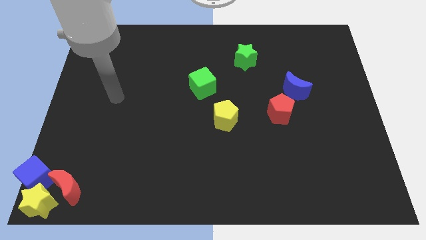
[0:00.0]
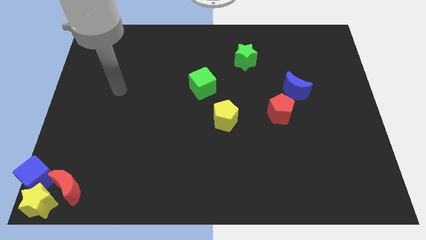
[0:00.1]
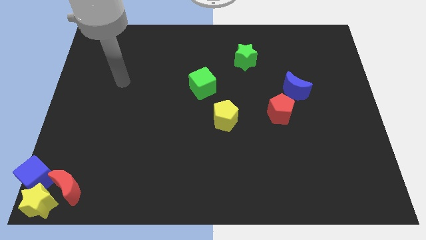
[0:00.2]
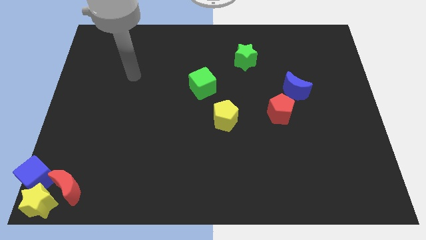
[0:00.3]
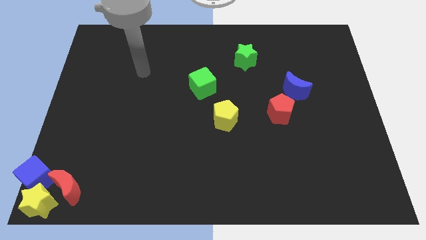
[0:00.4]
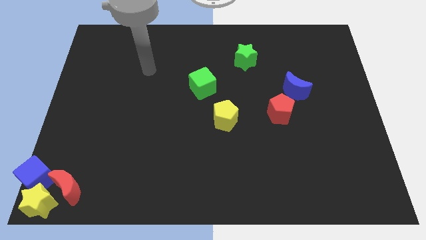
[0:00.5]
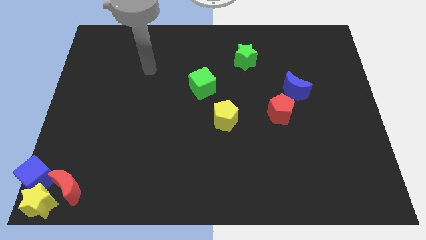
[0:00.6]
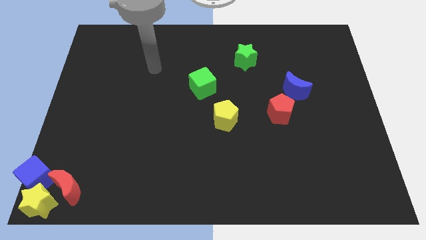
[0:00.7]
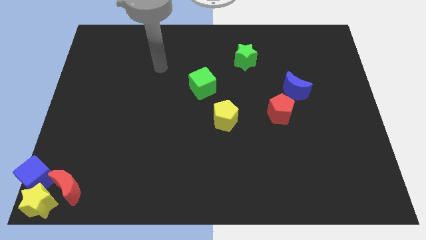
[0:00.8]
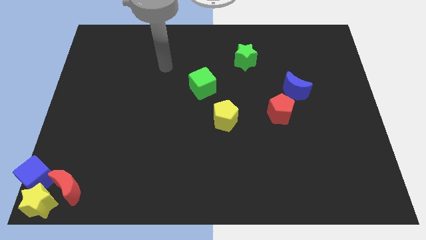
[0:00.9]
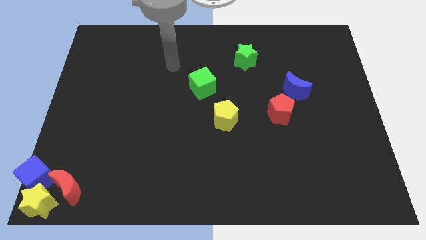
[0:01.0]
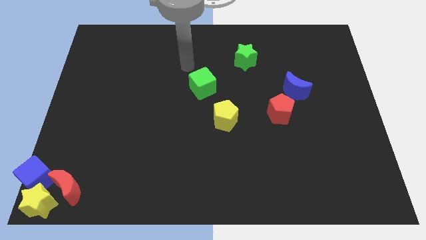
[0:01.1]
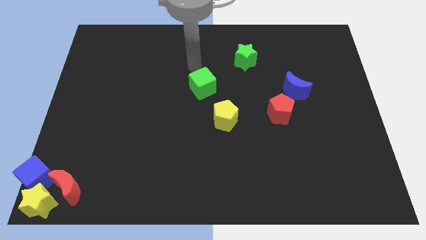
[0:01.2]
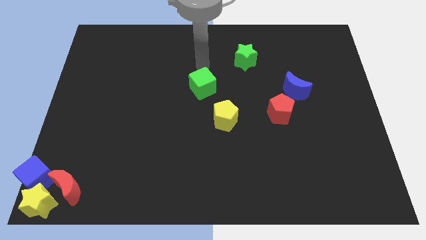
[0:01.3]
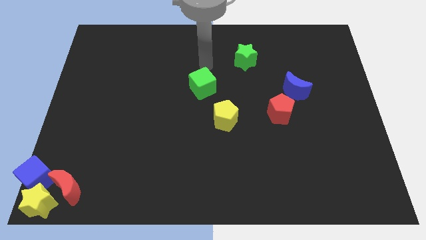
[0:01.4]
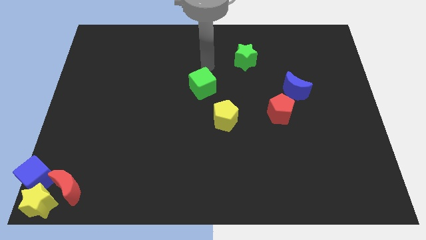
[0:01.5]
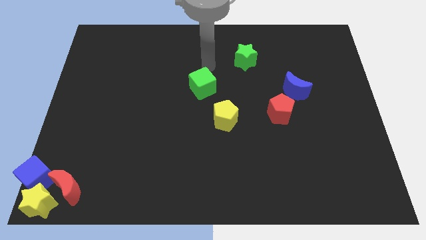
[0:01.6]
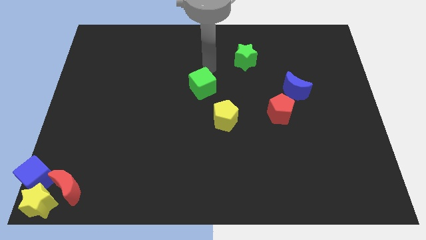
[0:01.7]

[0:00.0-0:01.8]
point above the green cube

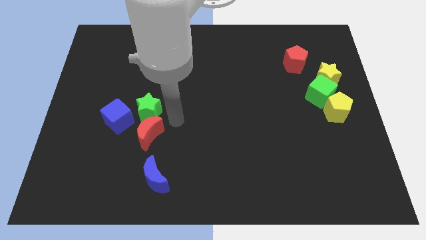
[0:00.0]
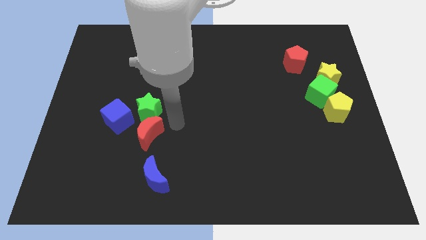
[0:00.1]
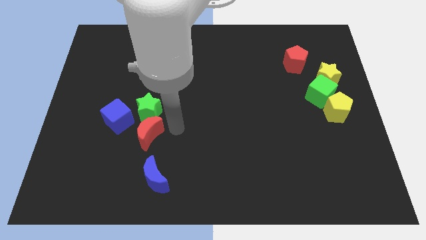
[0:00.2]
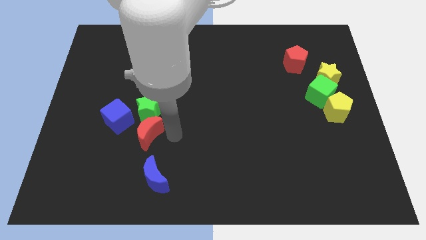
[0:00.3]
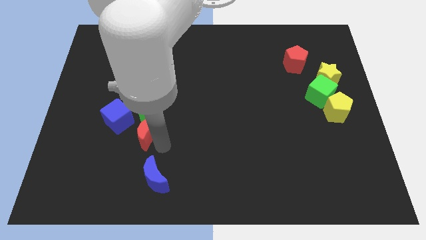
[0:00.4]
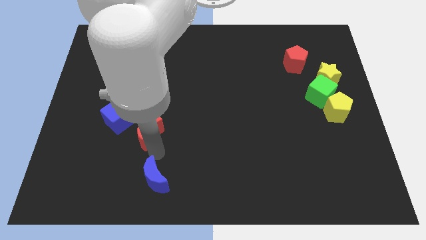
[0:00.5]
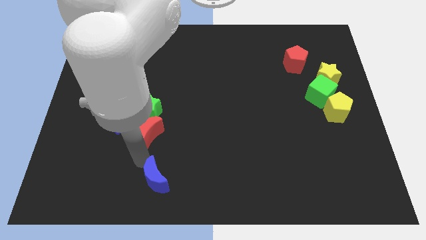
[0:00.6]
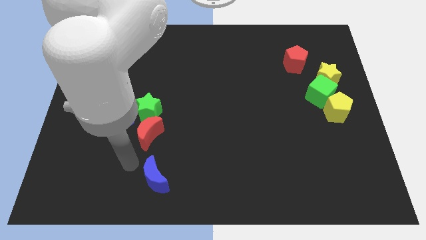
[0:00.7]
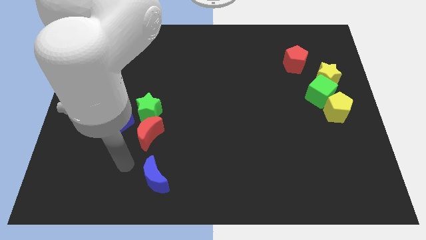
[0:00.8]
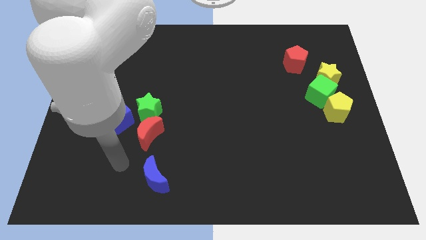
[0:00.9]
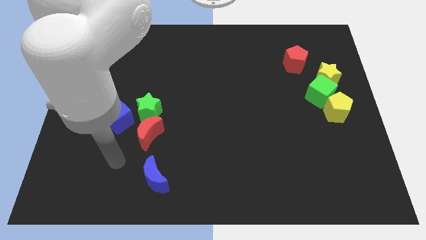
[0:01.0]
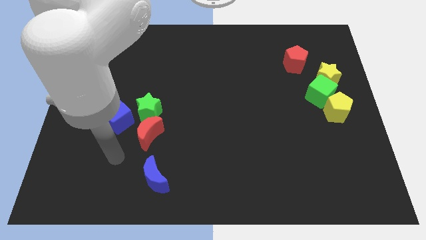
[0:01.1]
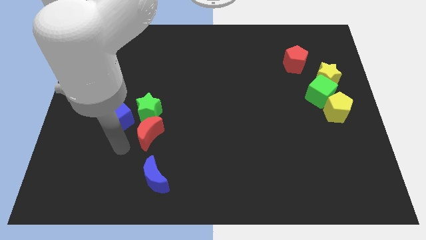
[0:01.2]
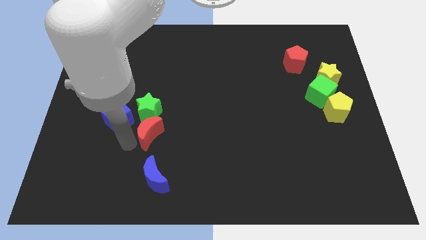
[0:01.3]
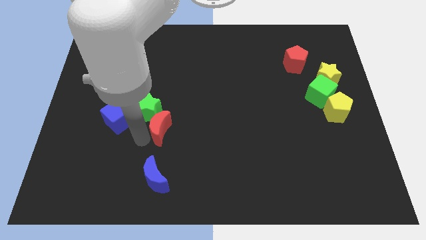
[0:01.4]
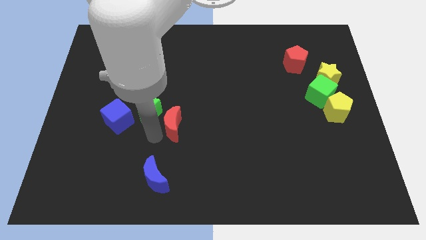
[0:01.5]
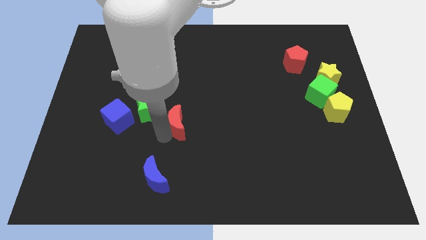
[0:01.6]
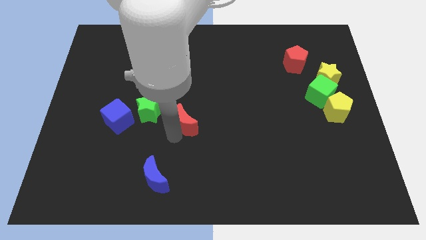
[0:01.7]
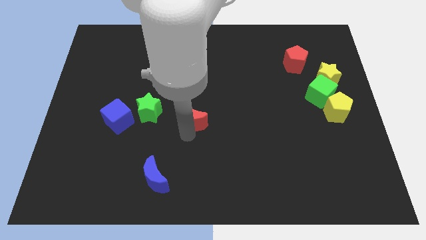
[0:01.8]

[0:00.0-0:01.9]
move the red crescent to the right of the green star

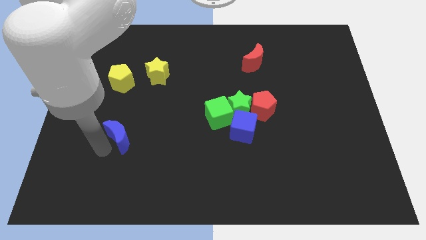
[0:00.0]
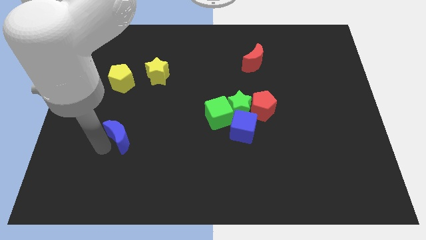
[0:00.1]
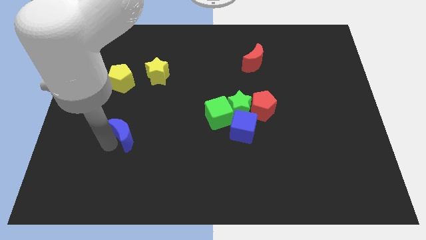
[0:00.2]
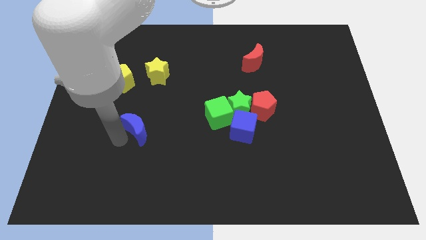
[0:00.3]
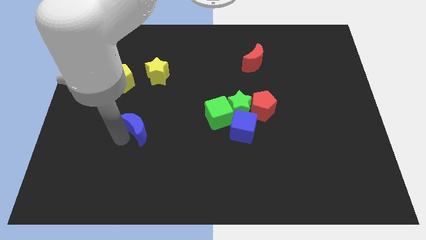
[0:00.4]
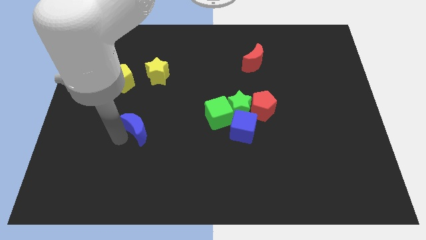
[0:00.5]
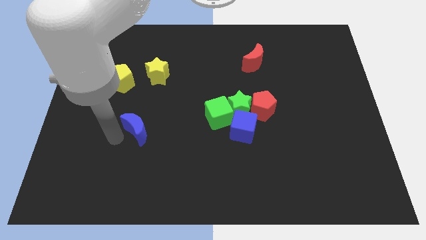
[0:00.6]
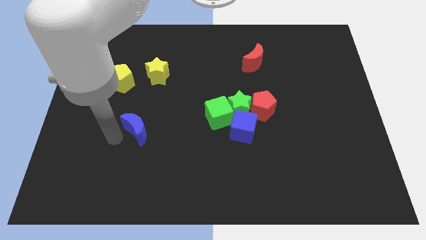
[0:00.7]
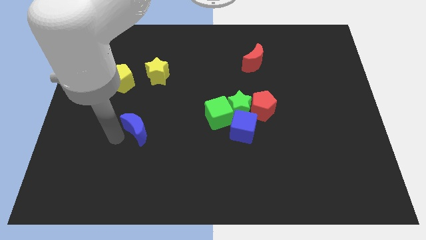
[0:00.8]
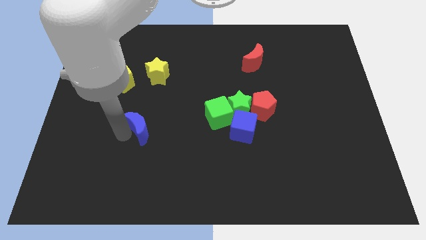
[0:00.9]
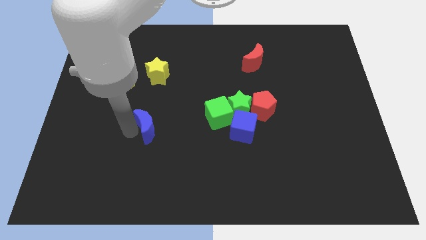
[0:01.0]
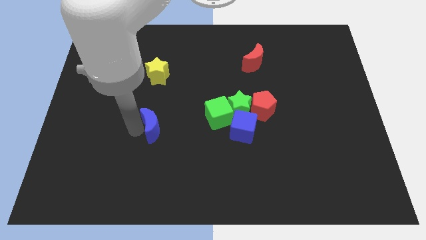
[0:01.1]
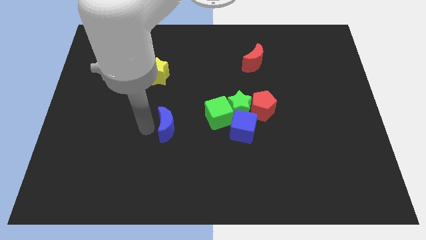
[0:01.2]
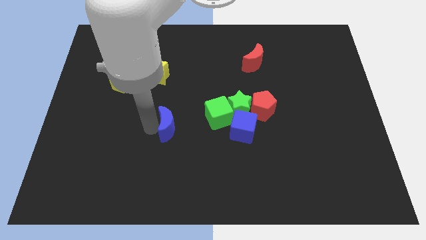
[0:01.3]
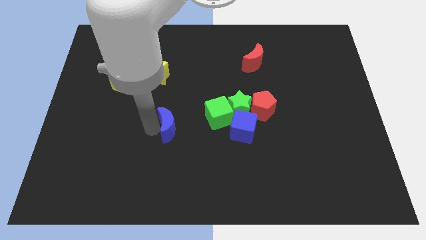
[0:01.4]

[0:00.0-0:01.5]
push the blue crescent towards the green cube

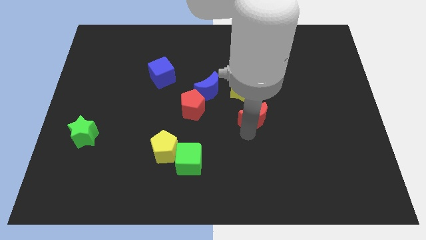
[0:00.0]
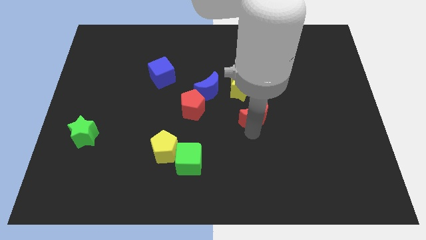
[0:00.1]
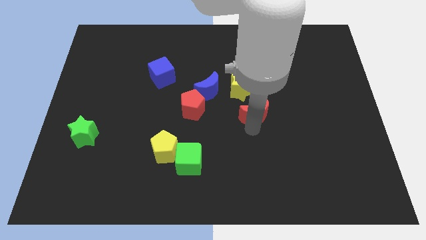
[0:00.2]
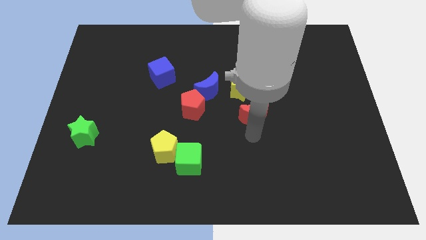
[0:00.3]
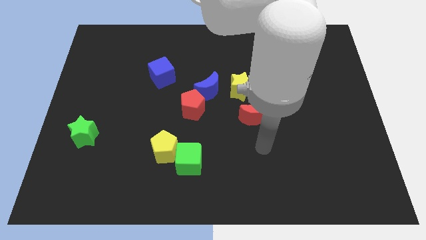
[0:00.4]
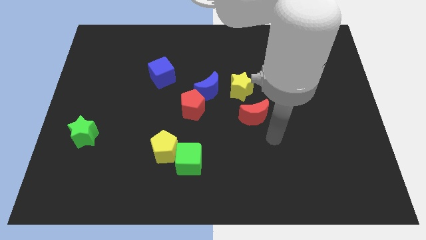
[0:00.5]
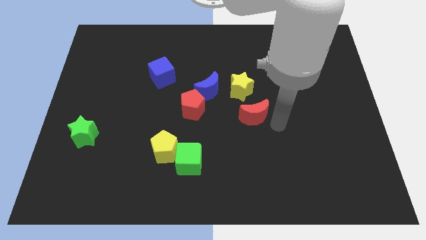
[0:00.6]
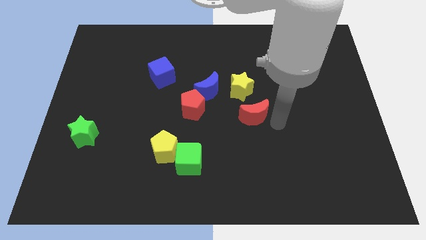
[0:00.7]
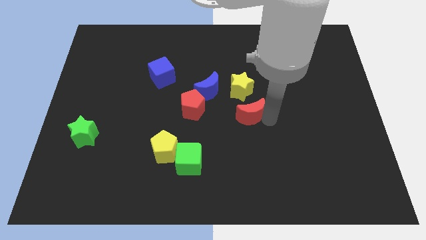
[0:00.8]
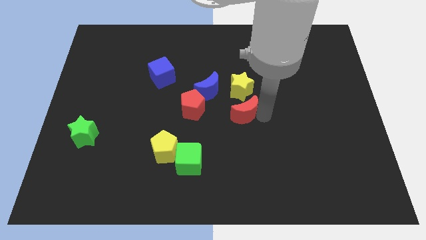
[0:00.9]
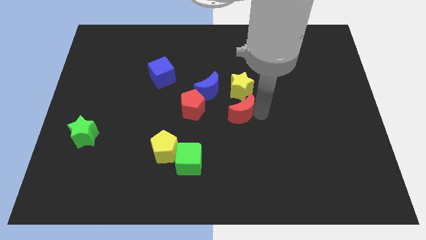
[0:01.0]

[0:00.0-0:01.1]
slide red moon towards yellow star

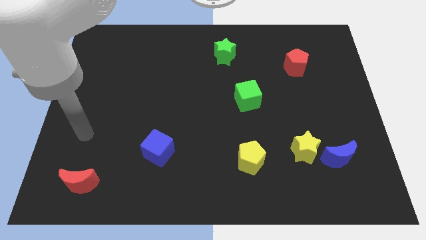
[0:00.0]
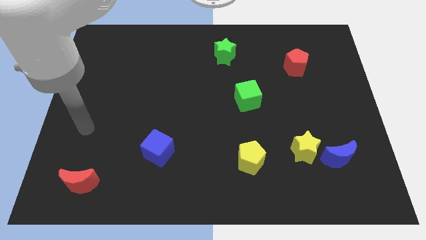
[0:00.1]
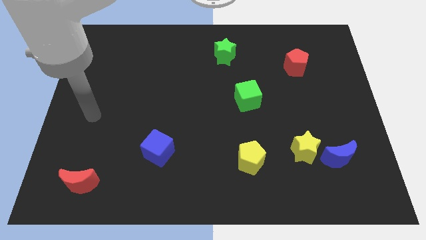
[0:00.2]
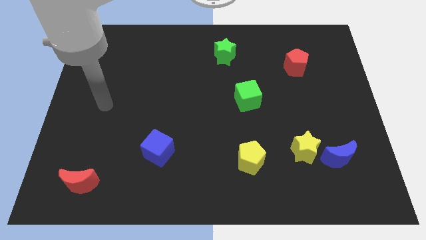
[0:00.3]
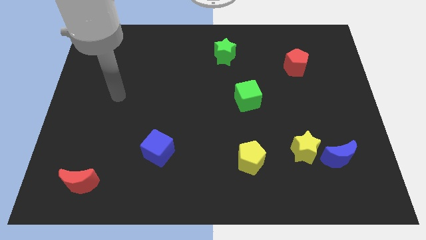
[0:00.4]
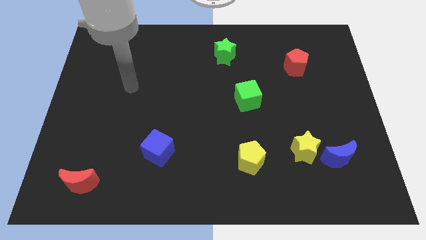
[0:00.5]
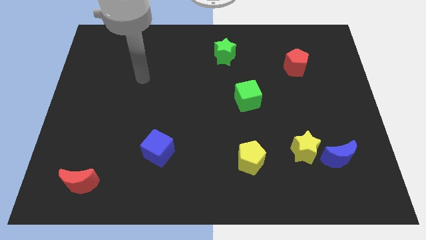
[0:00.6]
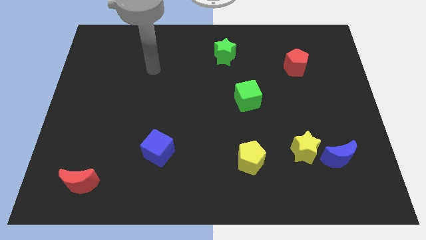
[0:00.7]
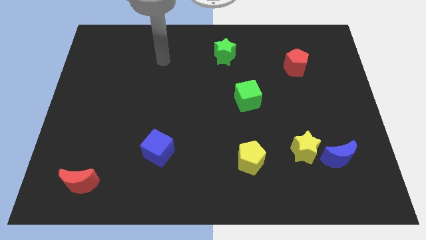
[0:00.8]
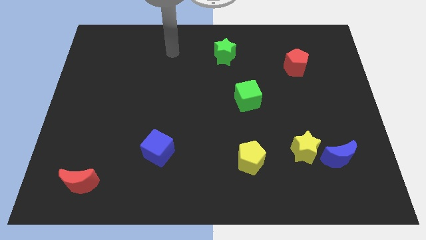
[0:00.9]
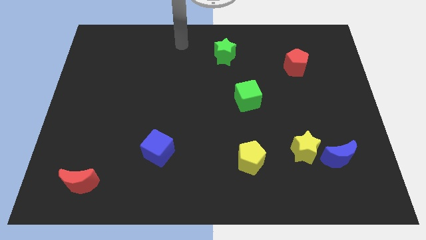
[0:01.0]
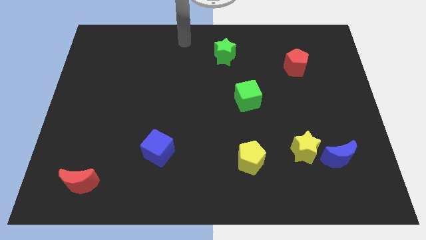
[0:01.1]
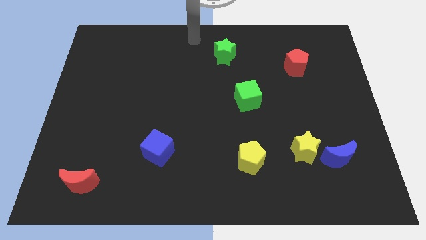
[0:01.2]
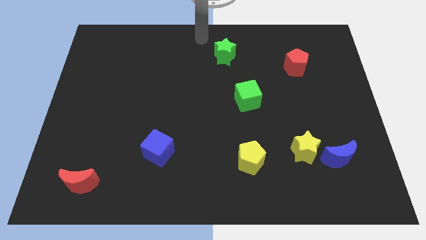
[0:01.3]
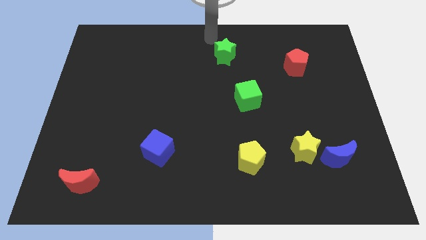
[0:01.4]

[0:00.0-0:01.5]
point your hand at the top left side of the green star

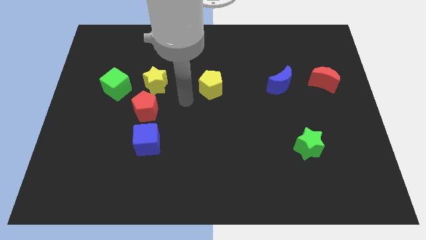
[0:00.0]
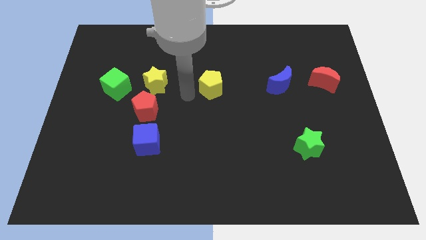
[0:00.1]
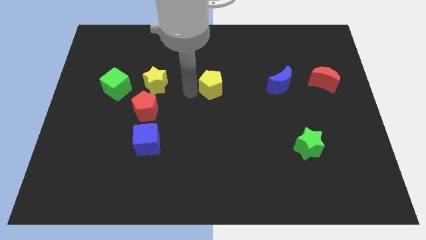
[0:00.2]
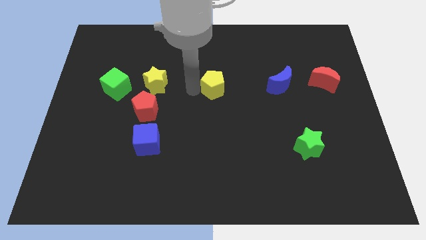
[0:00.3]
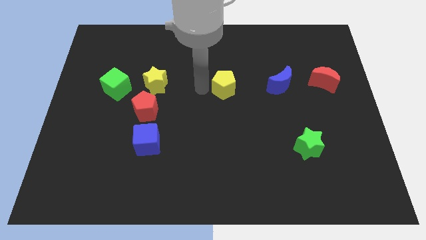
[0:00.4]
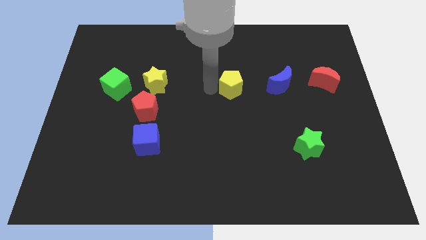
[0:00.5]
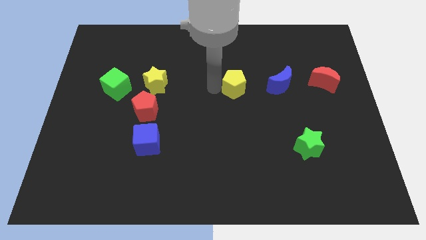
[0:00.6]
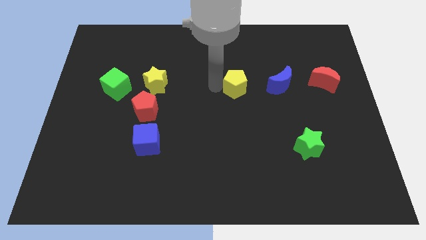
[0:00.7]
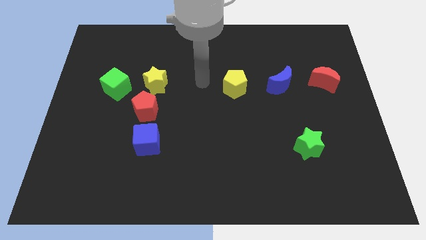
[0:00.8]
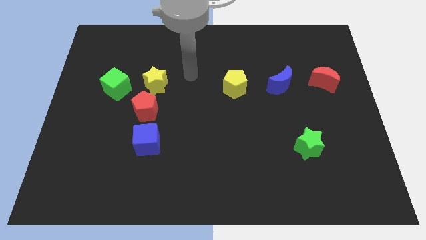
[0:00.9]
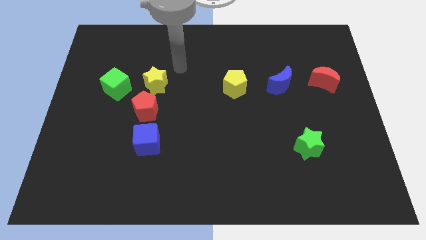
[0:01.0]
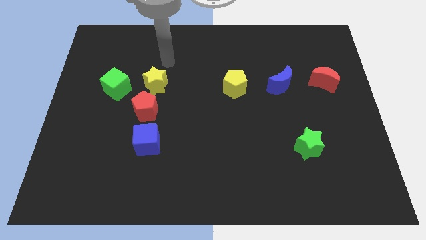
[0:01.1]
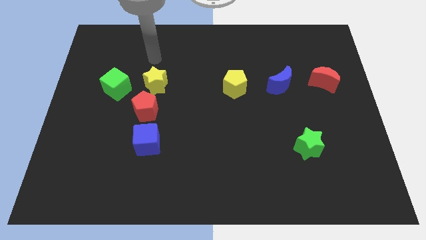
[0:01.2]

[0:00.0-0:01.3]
move the yellow star to the left side of the blue moon
